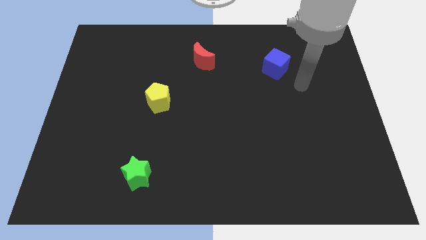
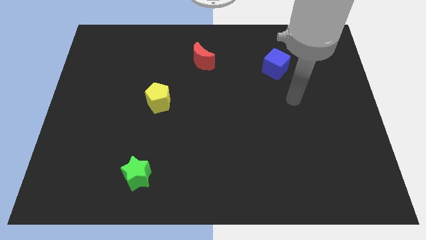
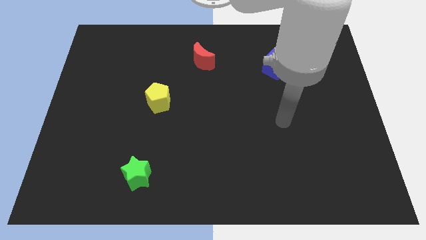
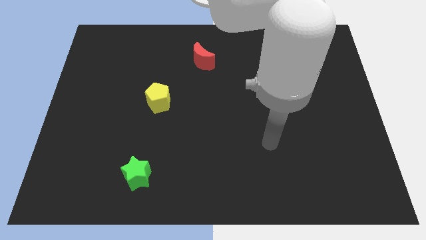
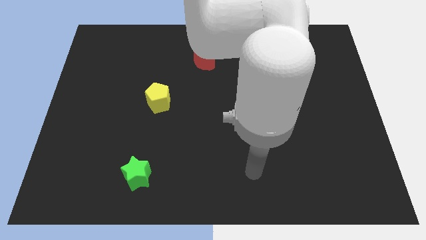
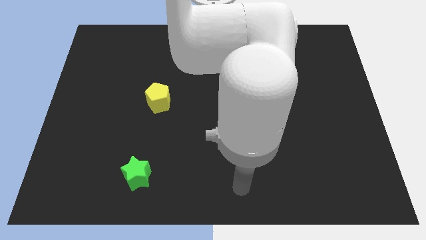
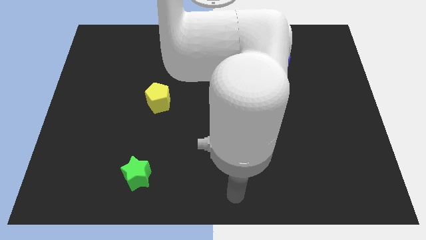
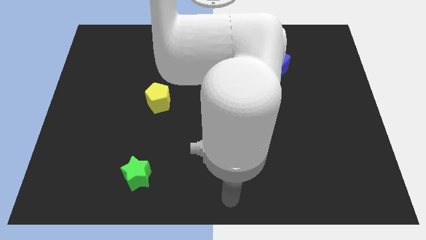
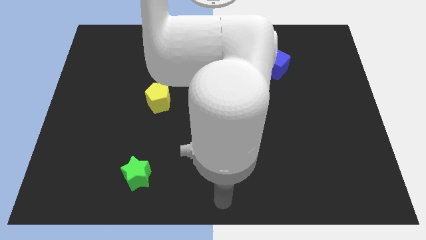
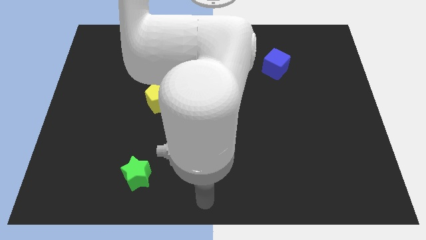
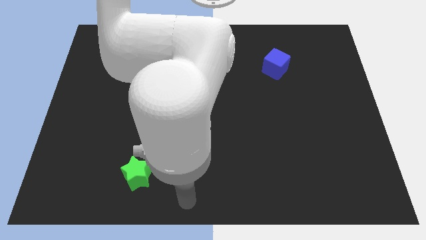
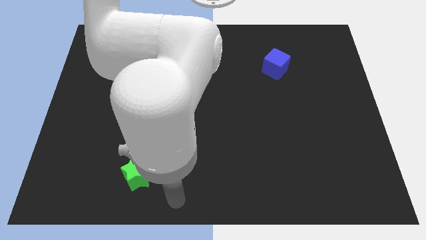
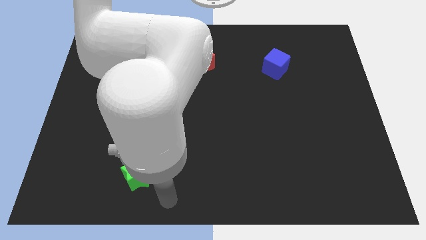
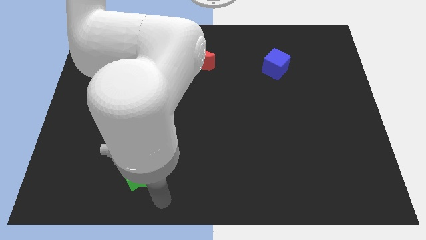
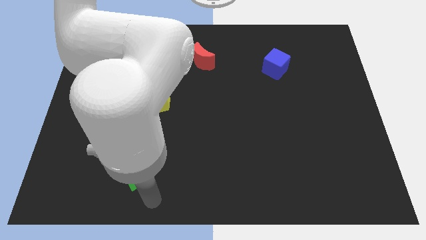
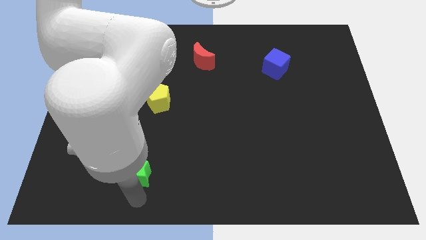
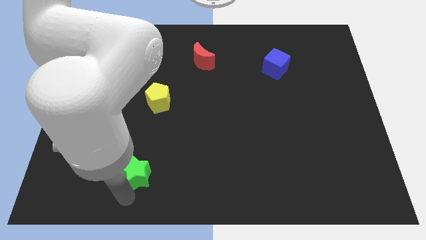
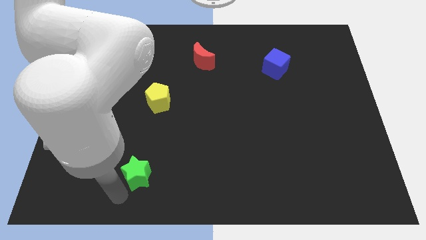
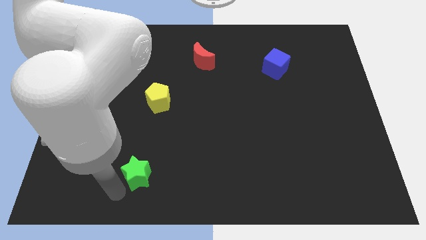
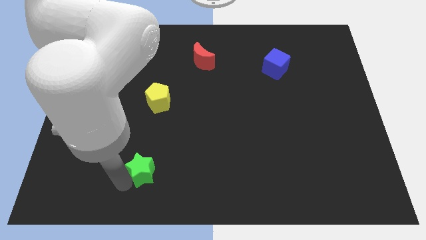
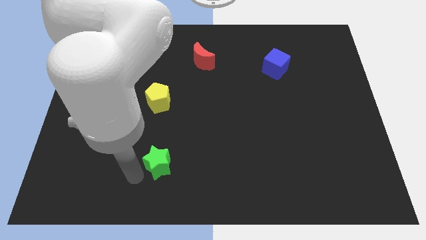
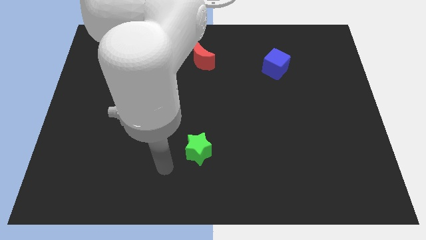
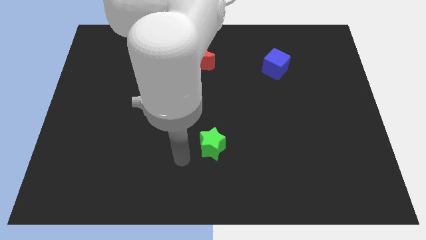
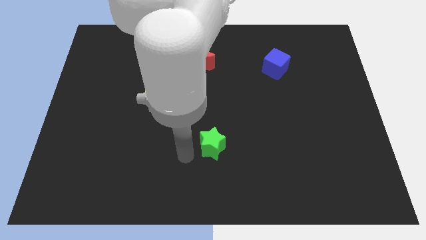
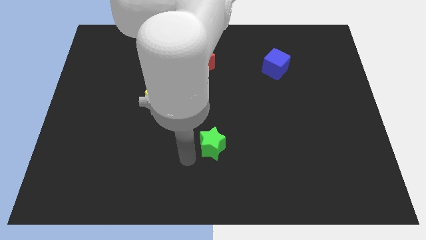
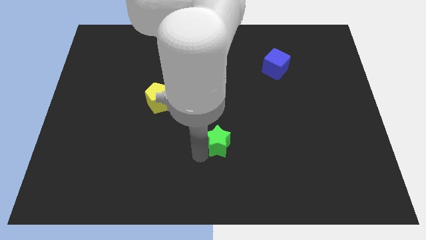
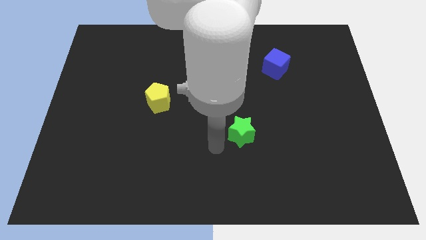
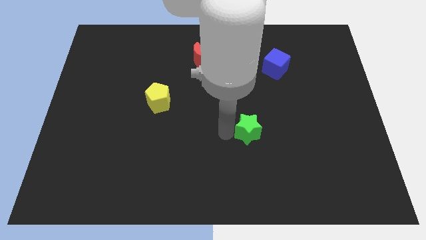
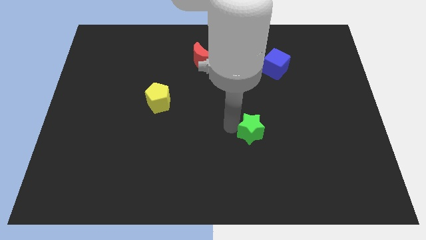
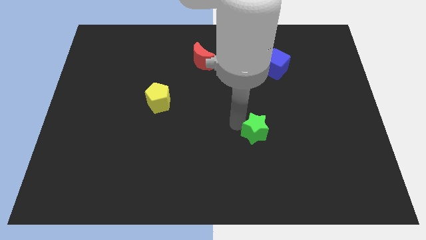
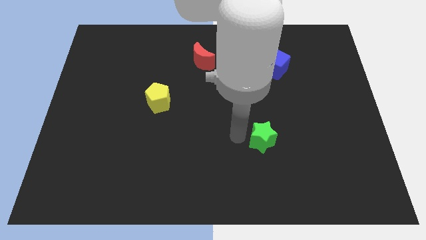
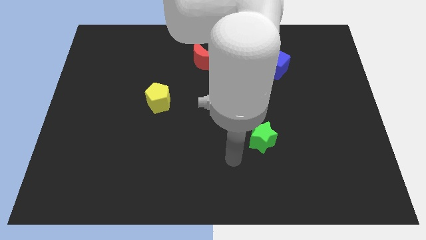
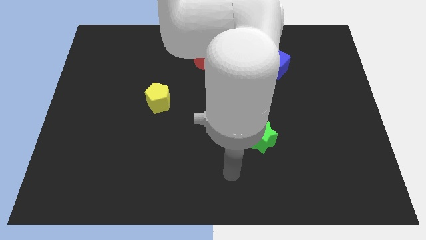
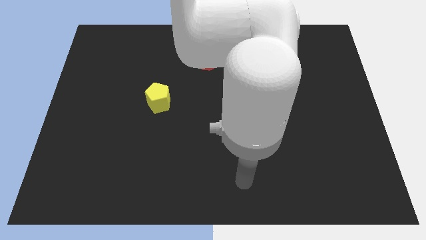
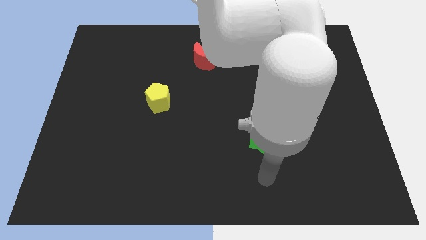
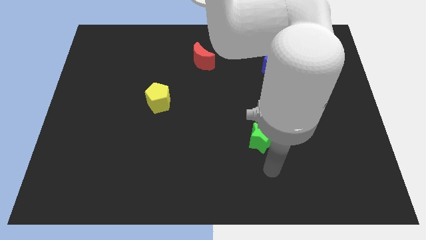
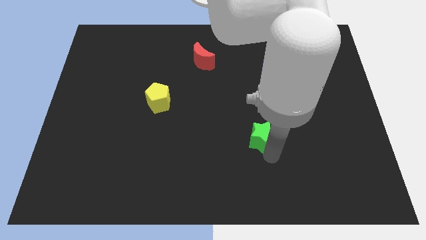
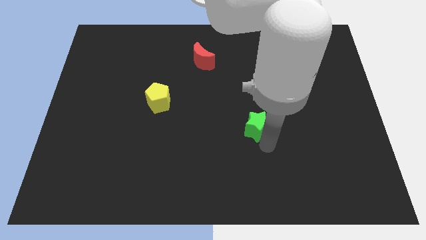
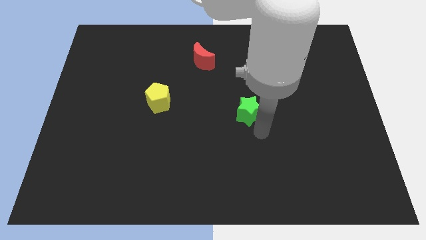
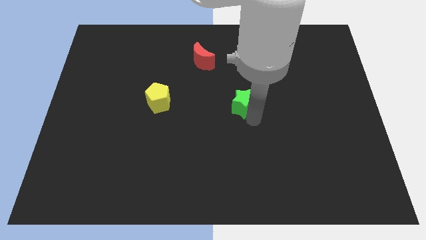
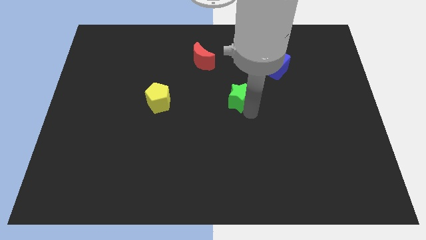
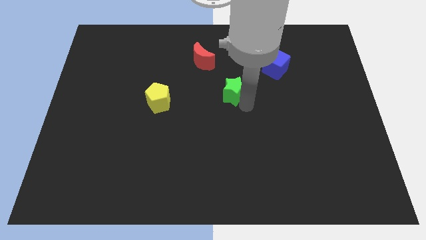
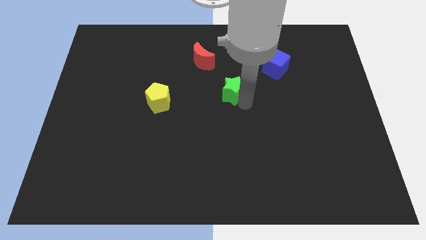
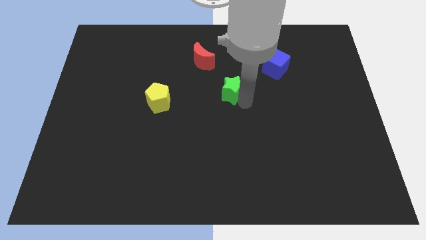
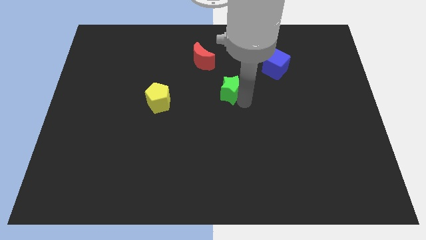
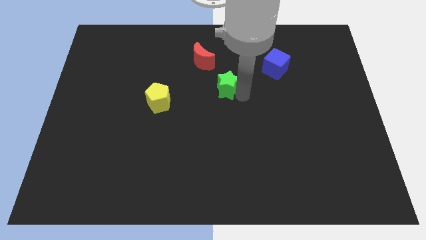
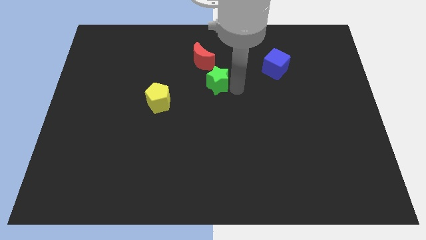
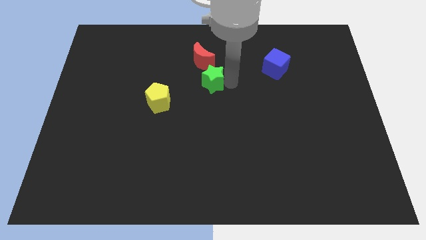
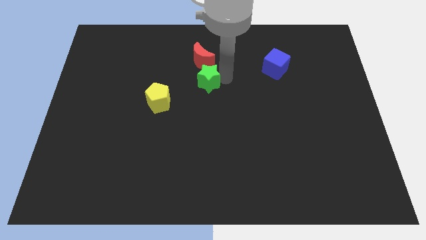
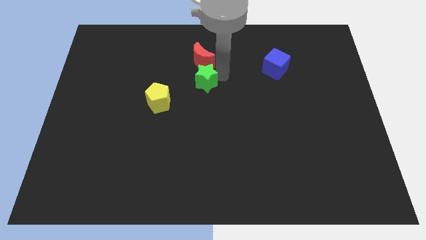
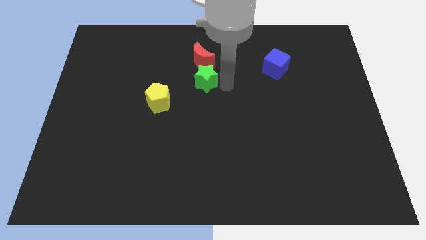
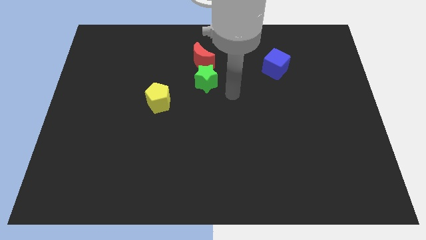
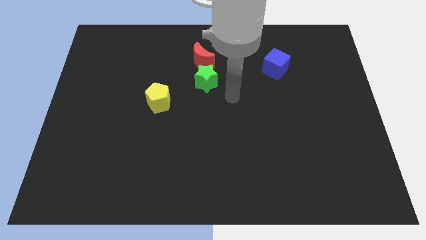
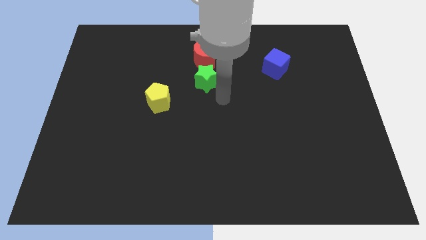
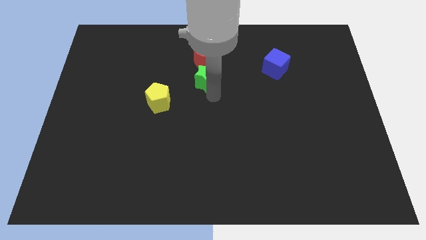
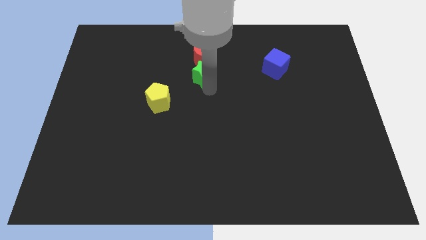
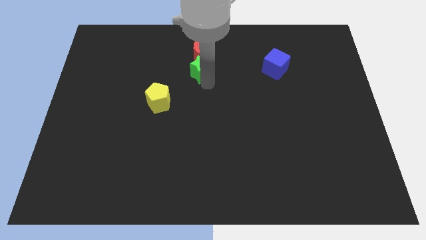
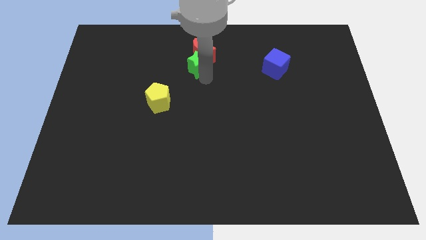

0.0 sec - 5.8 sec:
push the green star to the red moon

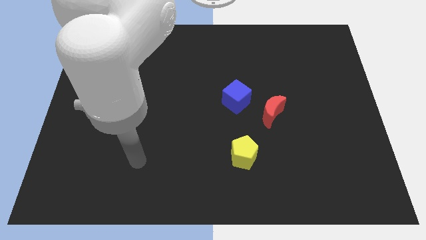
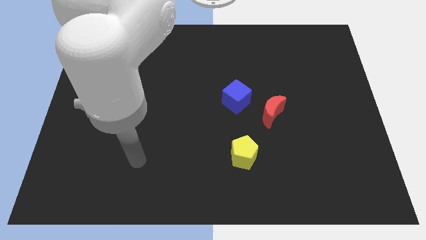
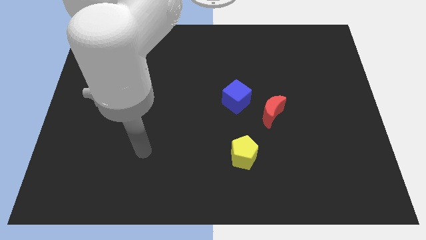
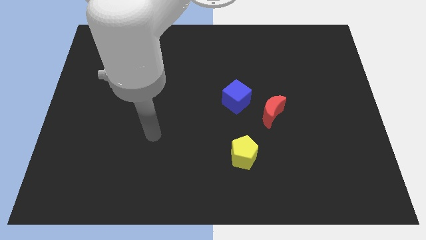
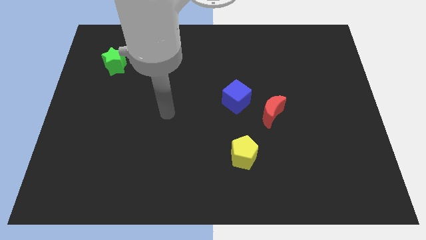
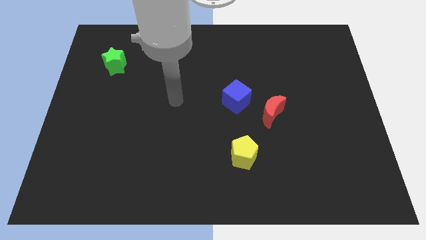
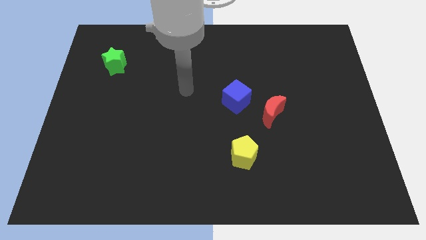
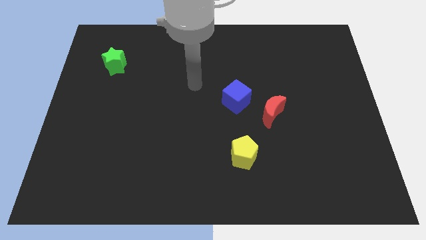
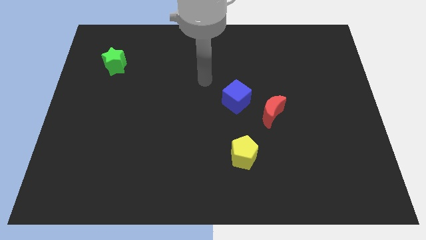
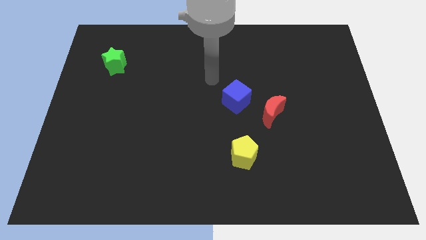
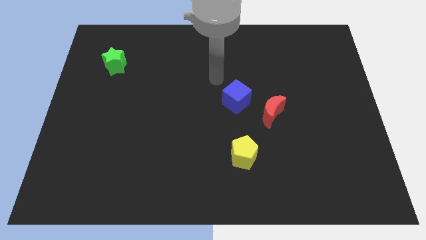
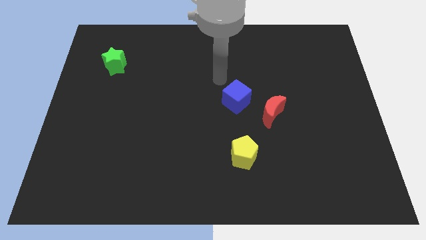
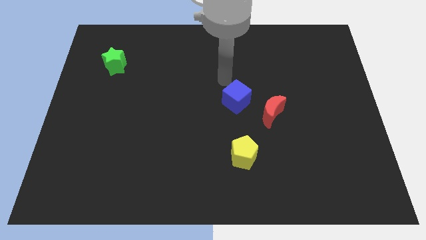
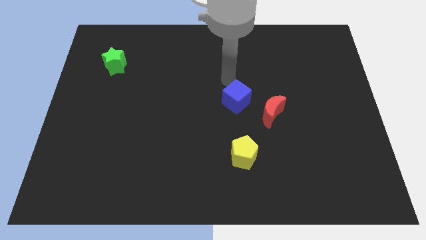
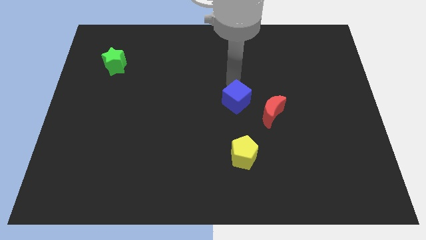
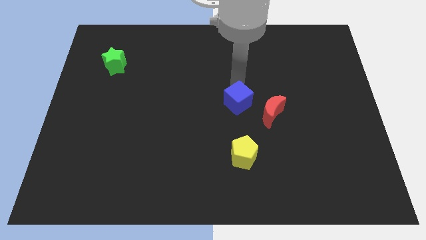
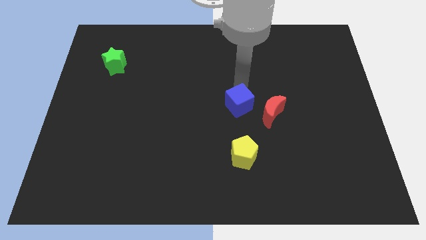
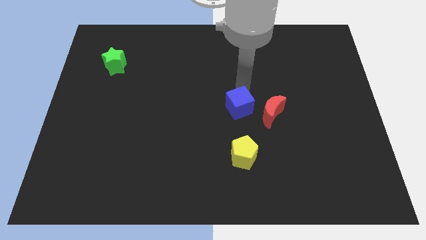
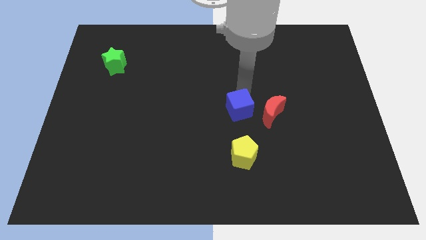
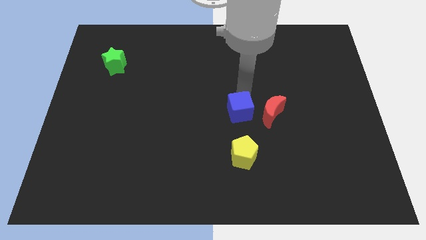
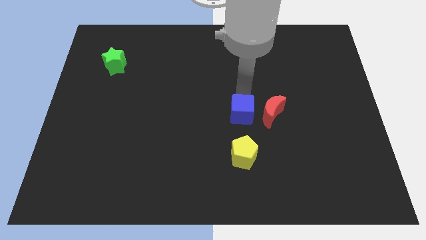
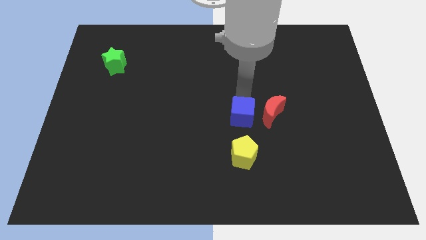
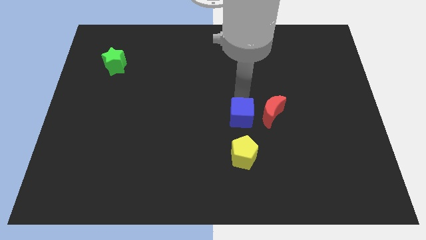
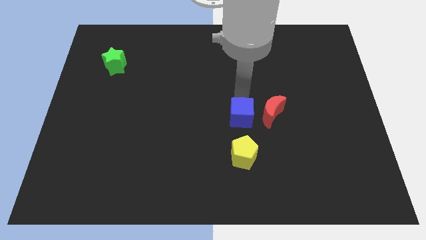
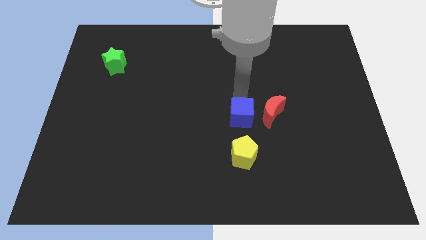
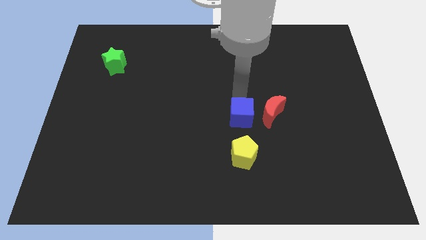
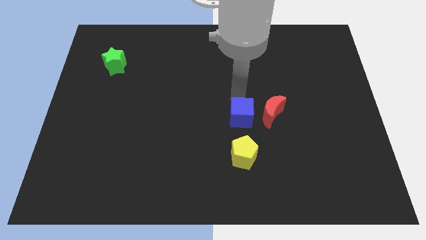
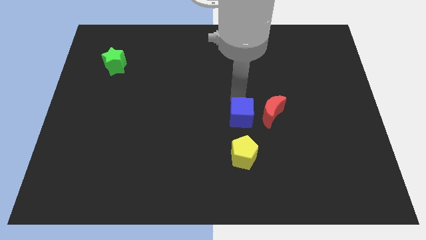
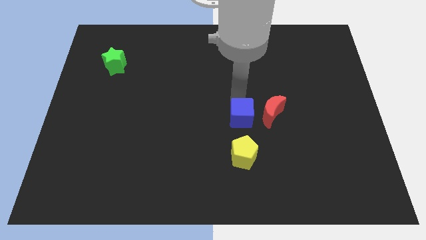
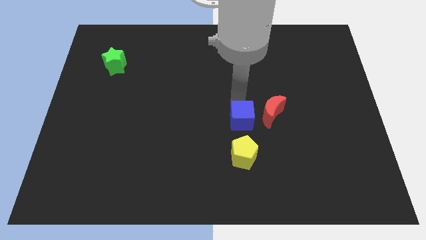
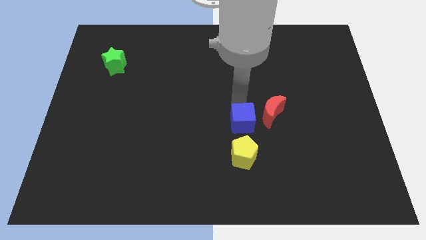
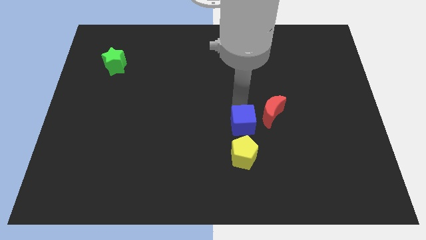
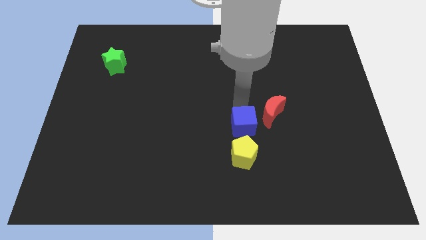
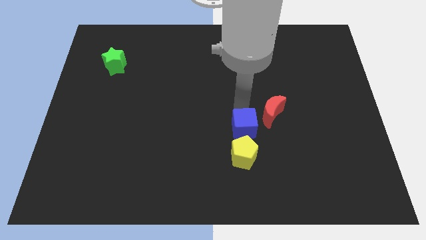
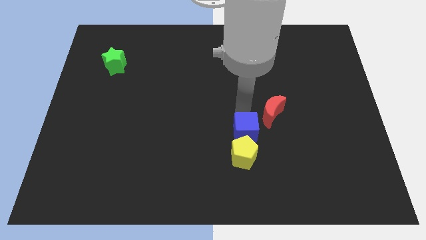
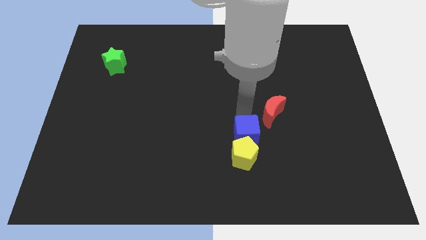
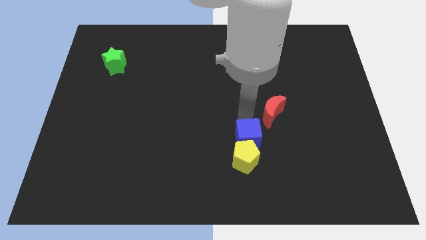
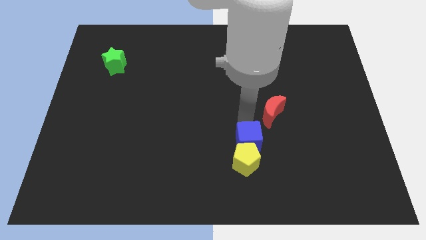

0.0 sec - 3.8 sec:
put the cube to the pentagon
